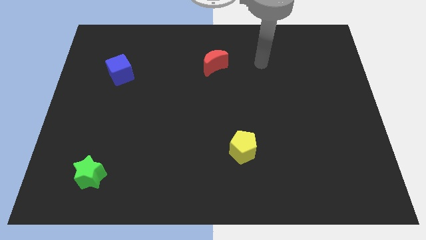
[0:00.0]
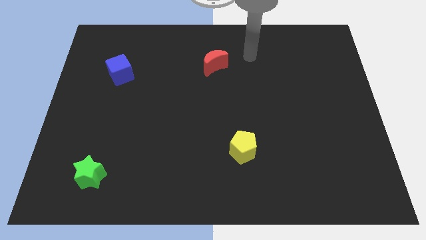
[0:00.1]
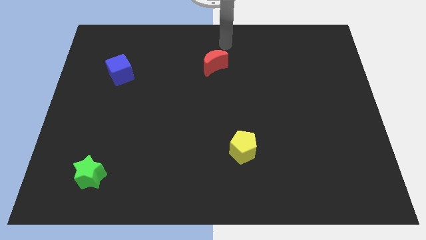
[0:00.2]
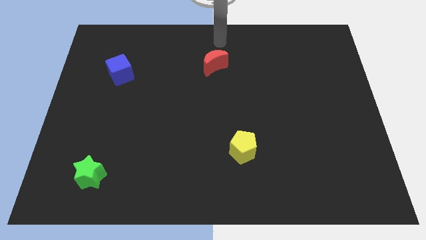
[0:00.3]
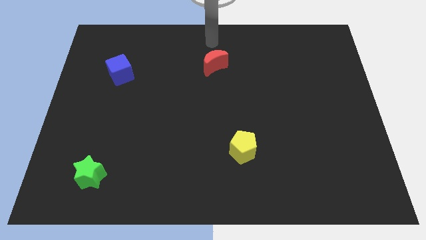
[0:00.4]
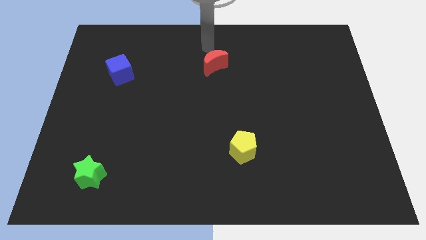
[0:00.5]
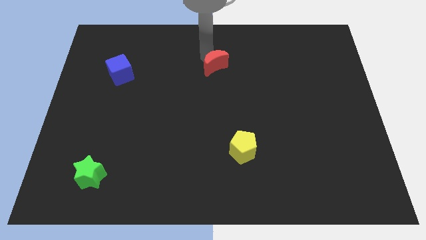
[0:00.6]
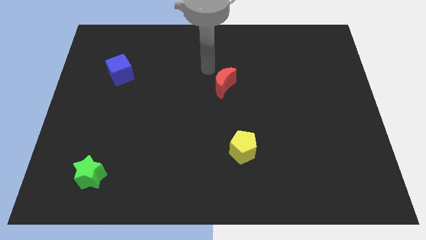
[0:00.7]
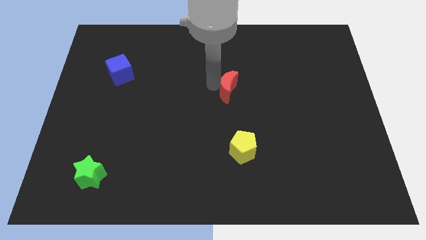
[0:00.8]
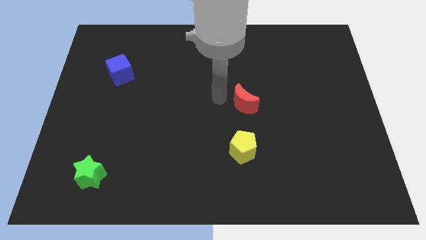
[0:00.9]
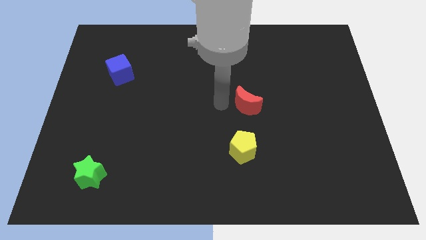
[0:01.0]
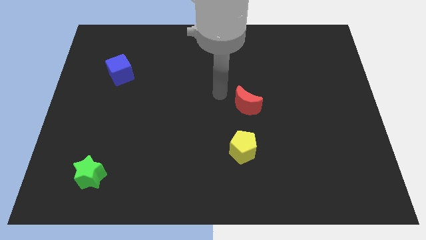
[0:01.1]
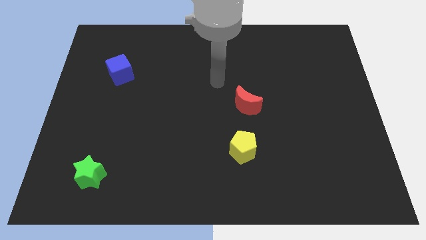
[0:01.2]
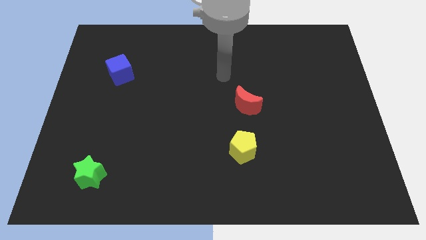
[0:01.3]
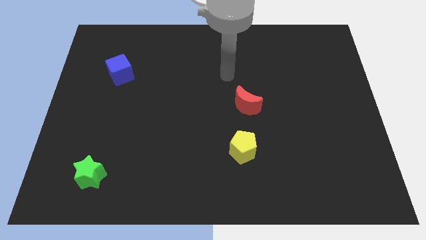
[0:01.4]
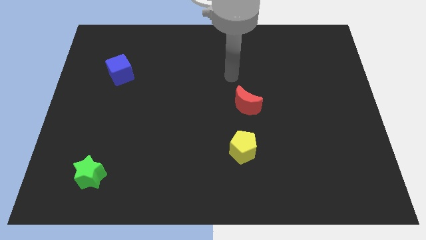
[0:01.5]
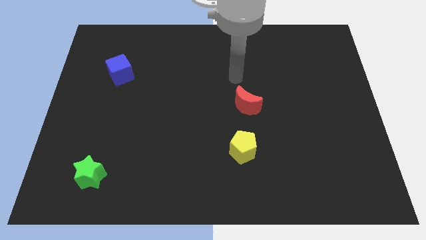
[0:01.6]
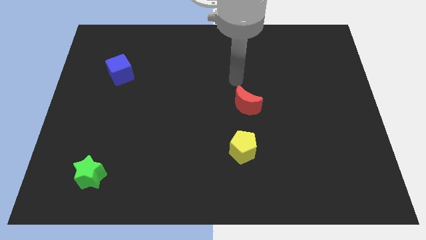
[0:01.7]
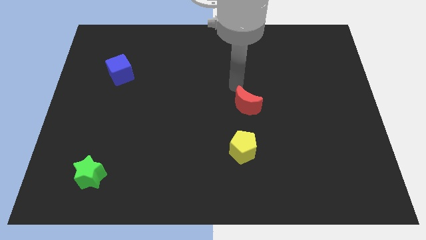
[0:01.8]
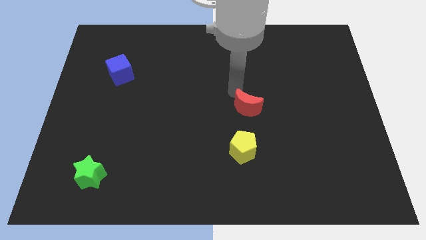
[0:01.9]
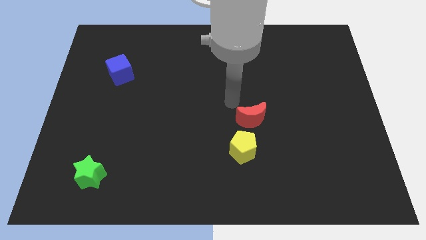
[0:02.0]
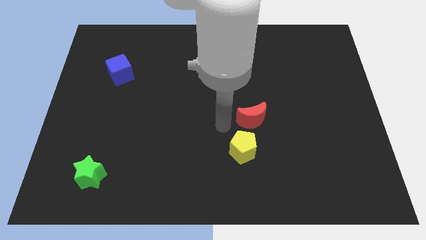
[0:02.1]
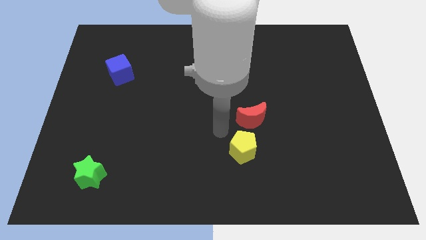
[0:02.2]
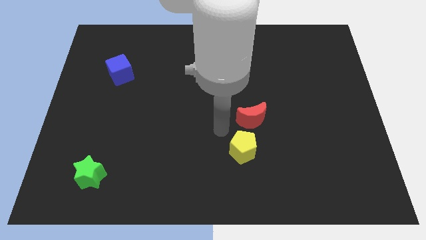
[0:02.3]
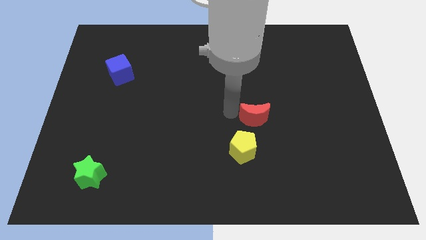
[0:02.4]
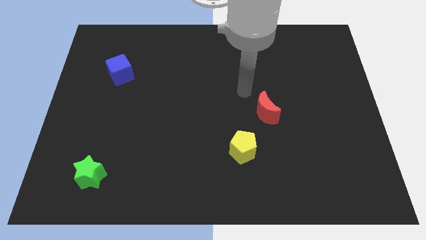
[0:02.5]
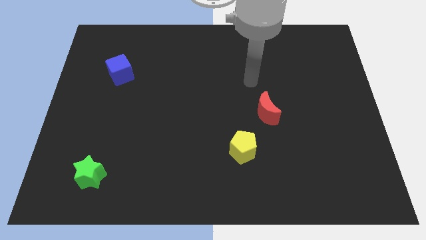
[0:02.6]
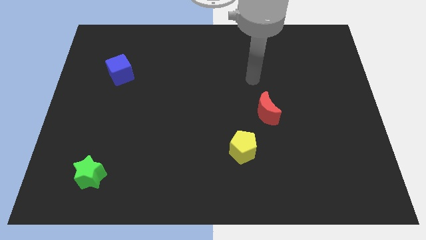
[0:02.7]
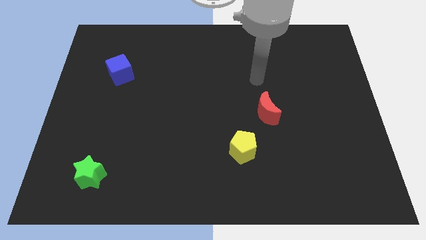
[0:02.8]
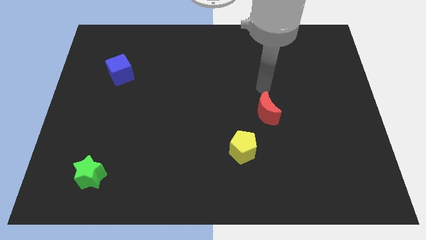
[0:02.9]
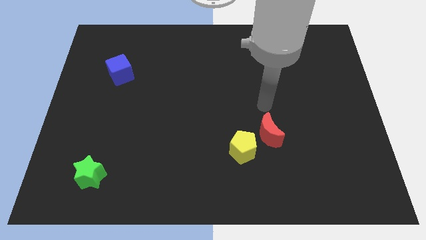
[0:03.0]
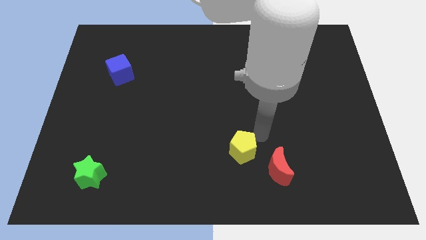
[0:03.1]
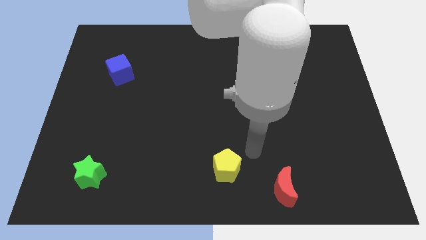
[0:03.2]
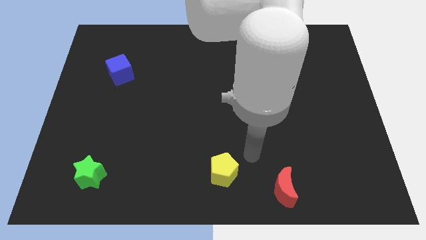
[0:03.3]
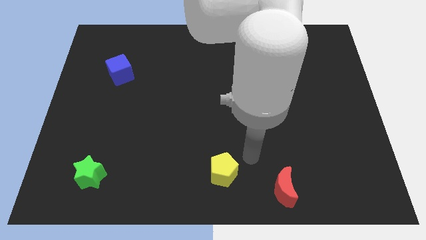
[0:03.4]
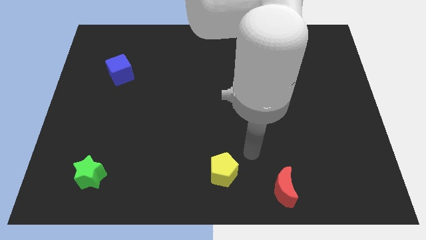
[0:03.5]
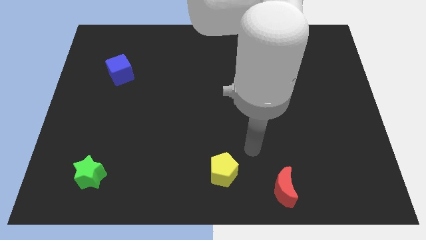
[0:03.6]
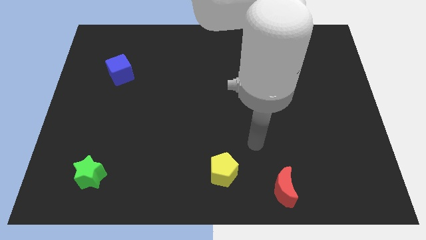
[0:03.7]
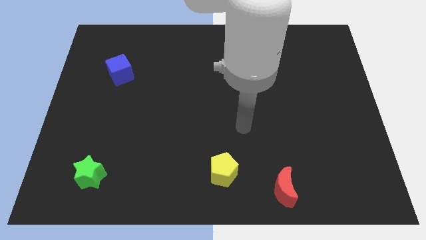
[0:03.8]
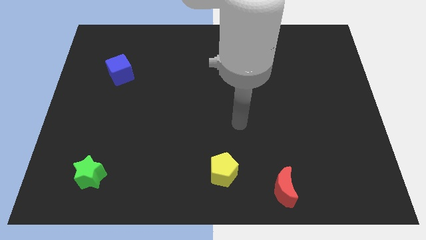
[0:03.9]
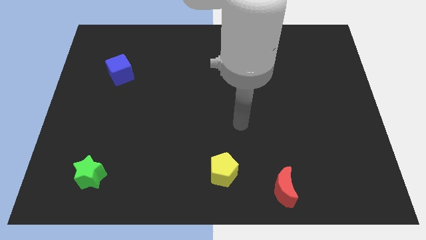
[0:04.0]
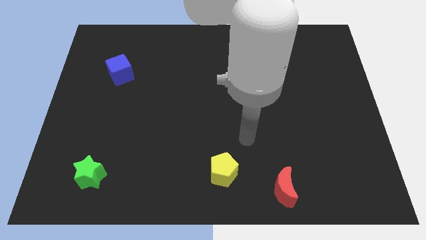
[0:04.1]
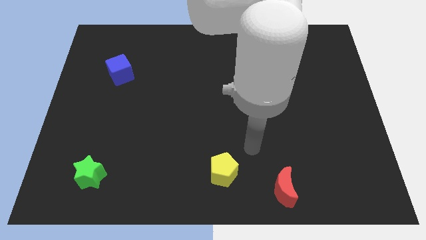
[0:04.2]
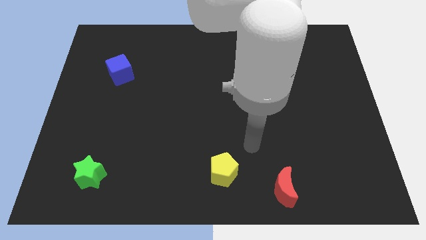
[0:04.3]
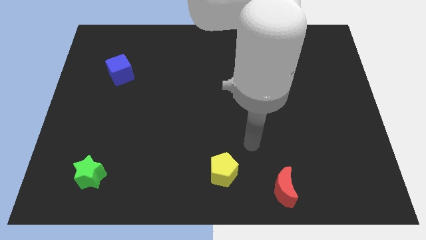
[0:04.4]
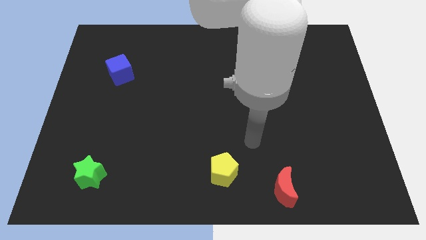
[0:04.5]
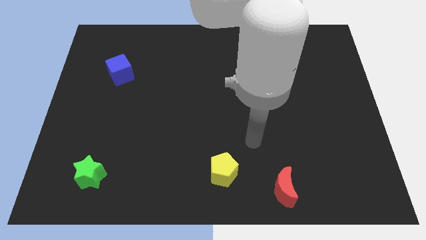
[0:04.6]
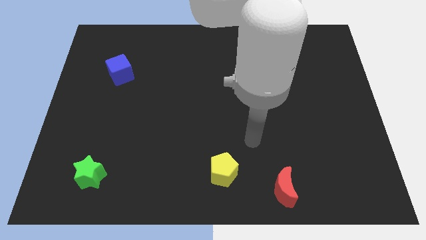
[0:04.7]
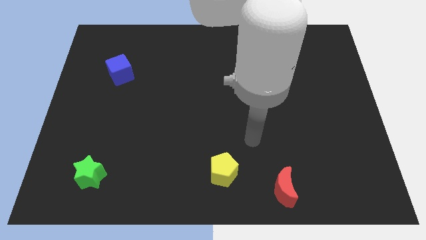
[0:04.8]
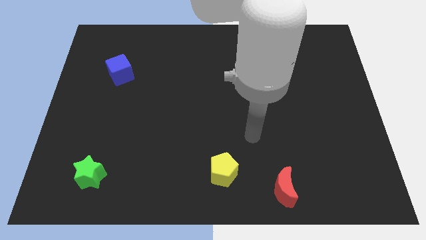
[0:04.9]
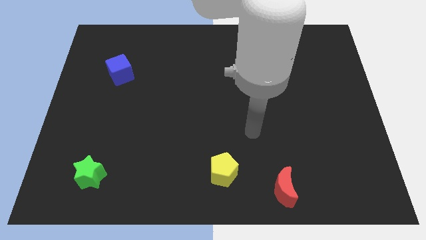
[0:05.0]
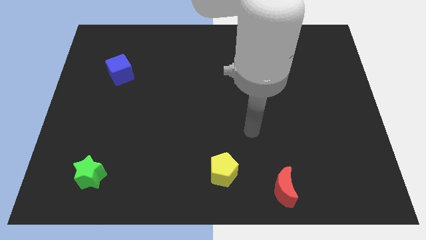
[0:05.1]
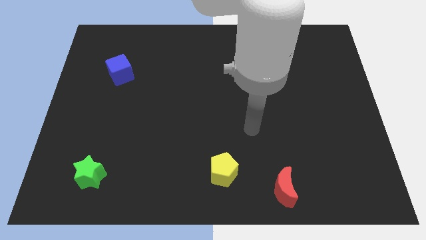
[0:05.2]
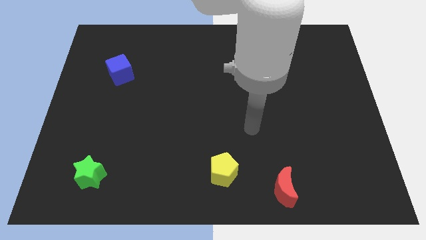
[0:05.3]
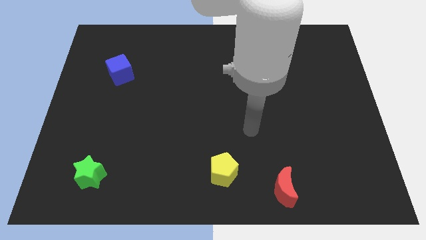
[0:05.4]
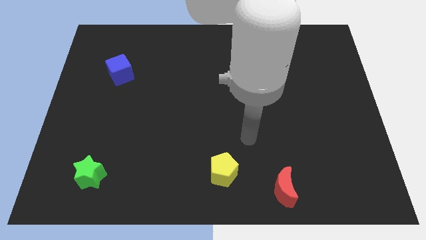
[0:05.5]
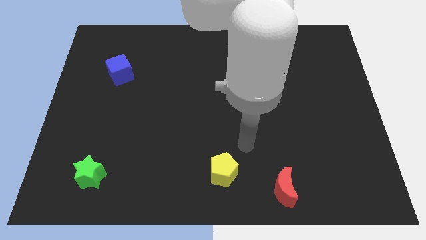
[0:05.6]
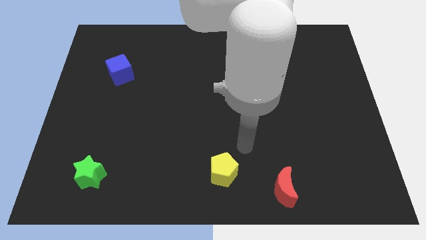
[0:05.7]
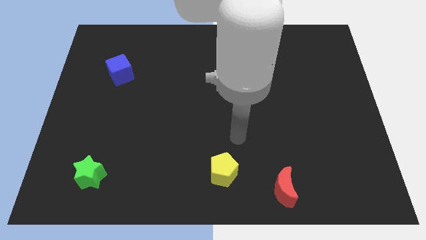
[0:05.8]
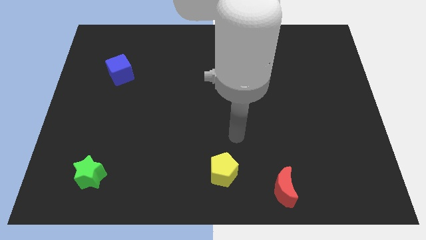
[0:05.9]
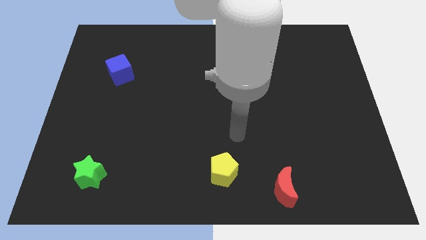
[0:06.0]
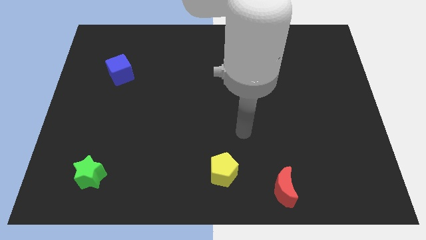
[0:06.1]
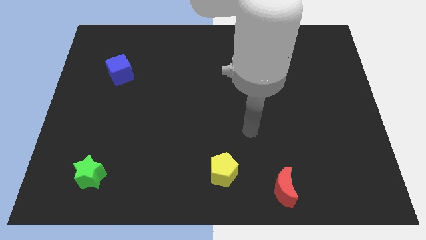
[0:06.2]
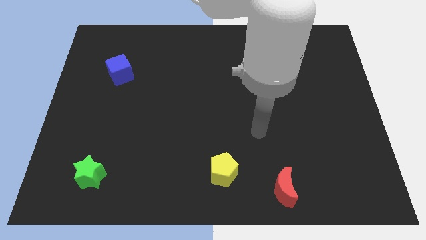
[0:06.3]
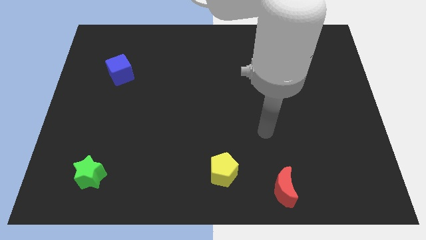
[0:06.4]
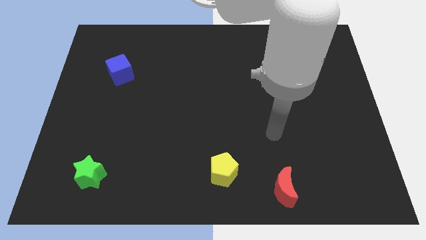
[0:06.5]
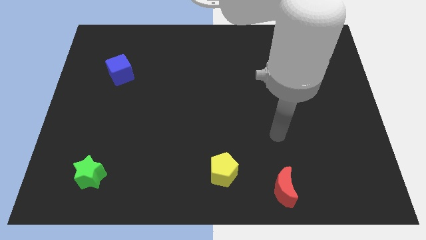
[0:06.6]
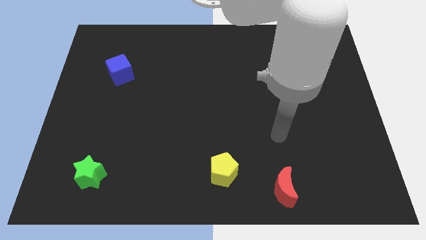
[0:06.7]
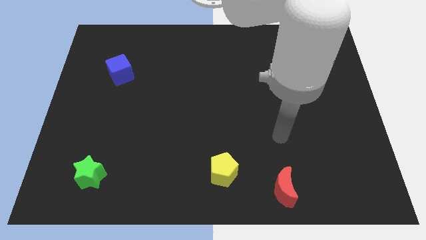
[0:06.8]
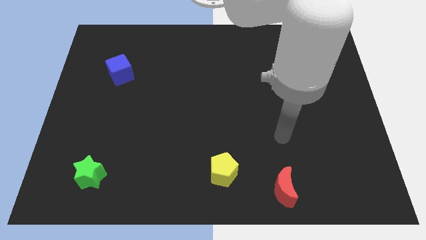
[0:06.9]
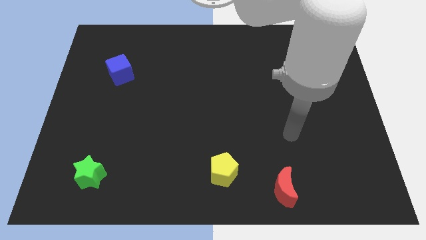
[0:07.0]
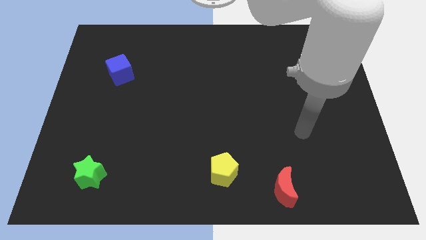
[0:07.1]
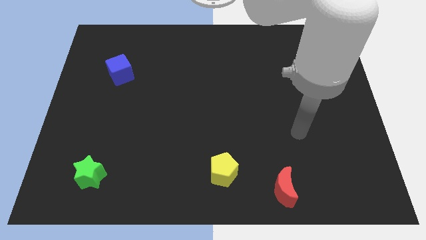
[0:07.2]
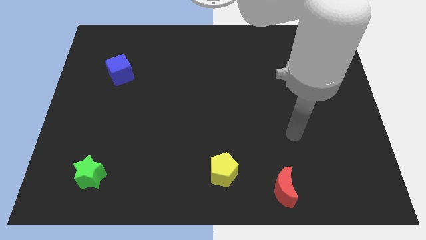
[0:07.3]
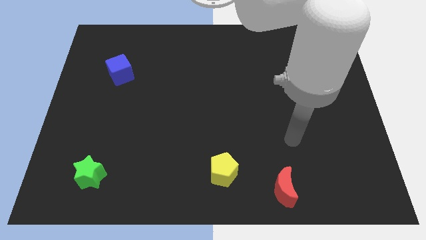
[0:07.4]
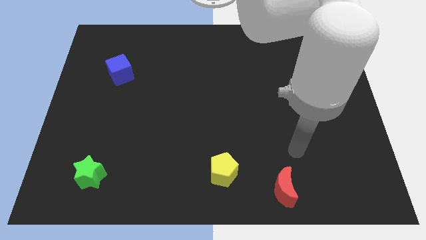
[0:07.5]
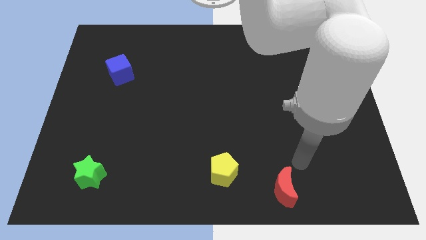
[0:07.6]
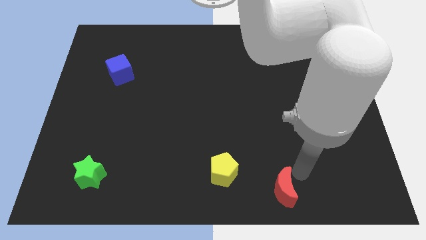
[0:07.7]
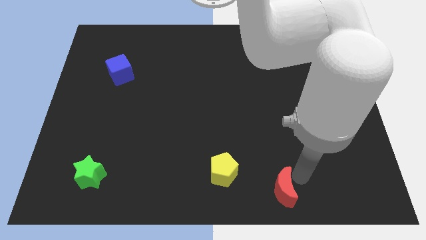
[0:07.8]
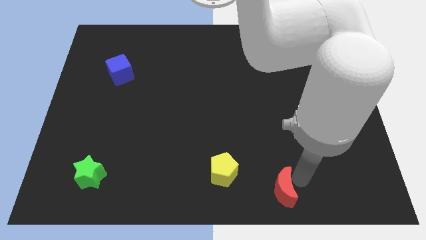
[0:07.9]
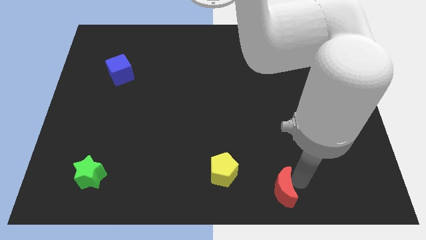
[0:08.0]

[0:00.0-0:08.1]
slide the moon close to the yellow pentagon

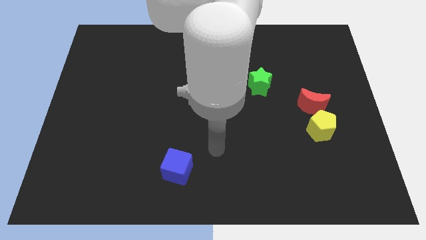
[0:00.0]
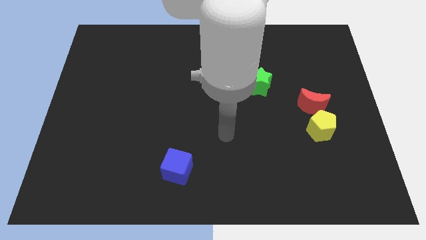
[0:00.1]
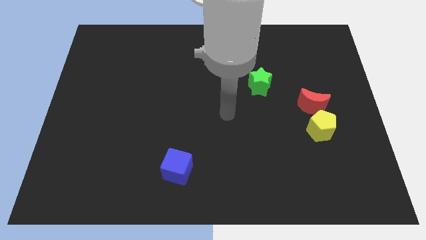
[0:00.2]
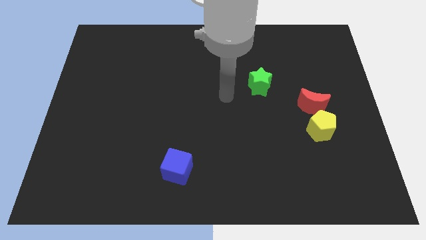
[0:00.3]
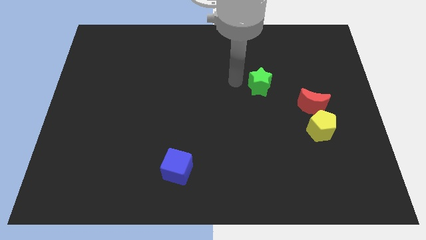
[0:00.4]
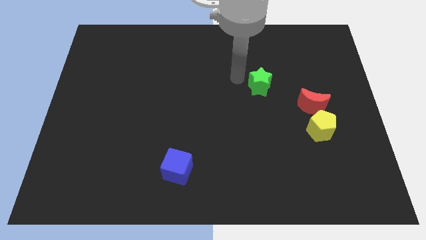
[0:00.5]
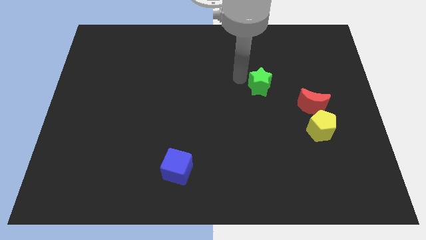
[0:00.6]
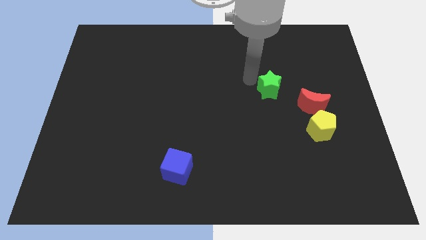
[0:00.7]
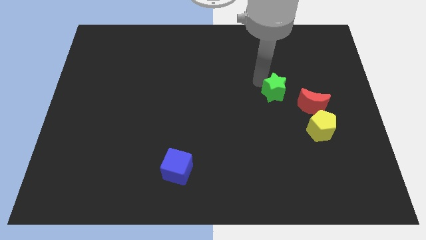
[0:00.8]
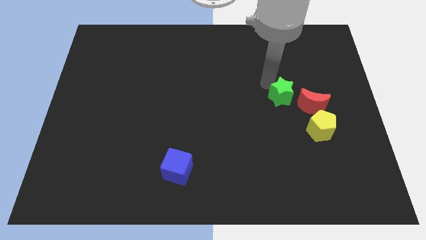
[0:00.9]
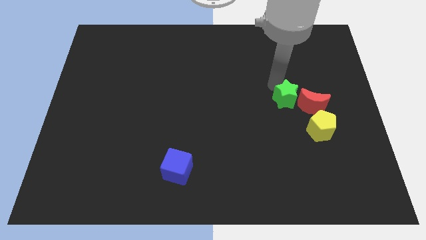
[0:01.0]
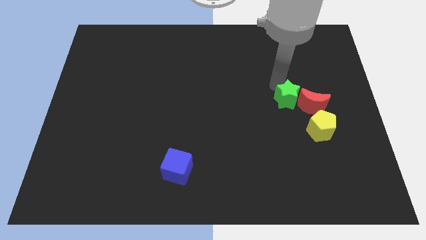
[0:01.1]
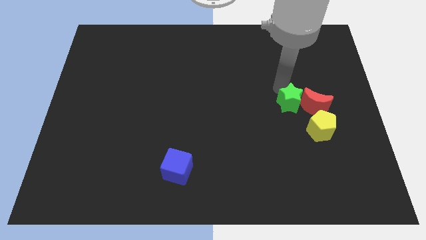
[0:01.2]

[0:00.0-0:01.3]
move the green block next to the moon
